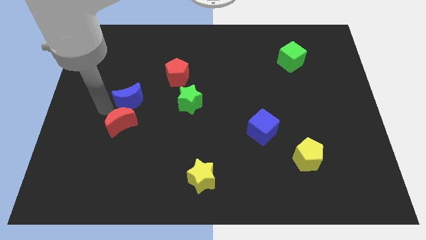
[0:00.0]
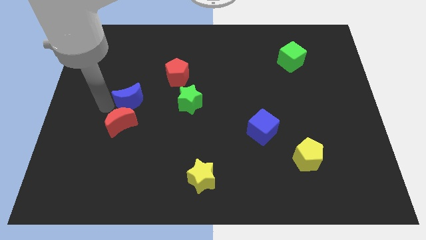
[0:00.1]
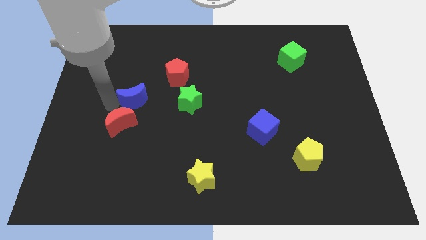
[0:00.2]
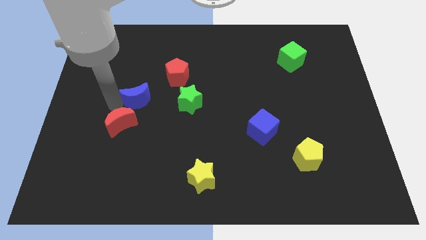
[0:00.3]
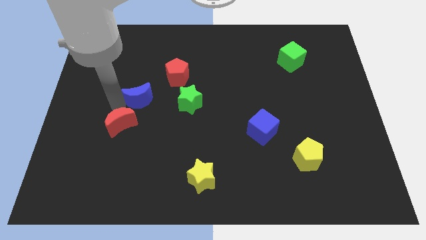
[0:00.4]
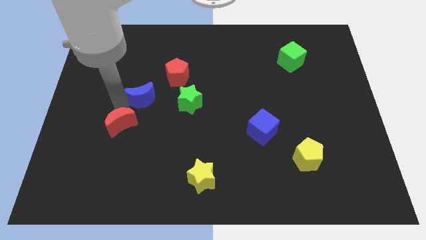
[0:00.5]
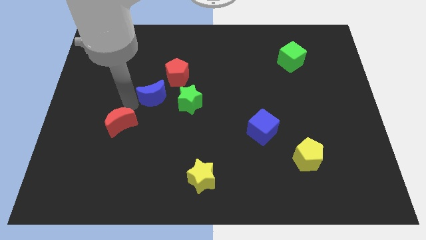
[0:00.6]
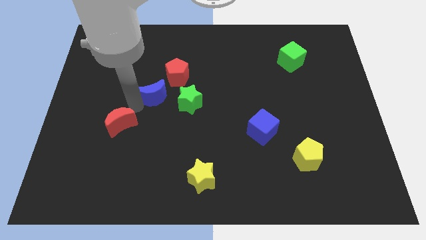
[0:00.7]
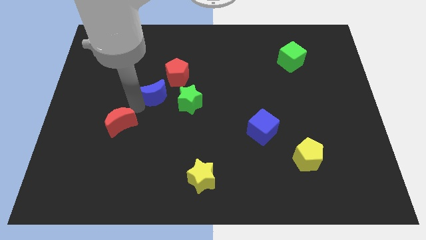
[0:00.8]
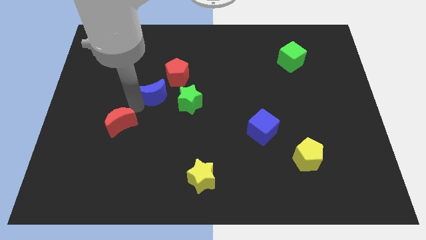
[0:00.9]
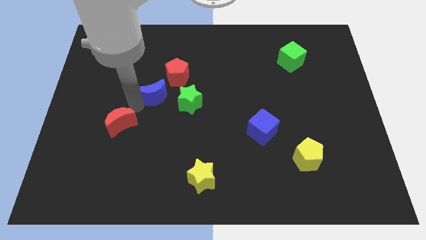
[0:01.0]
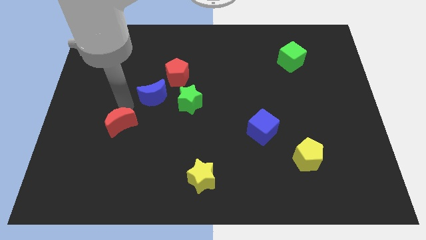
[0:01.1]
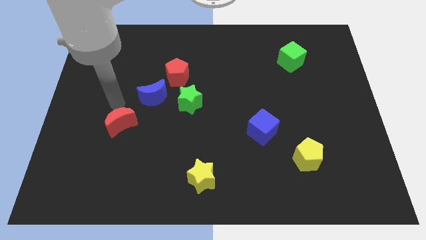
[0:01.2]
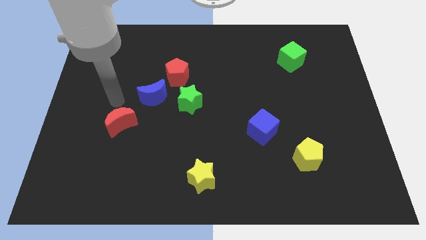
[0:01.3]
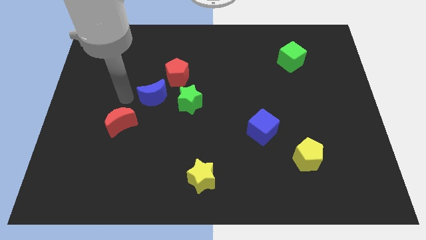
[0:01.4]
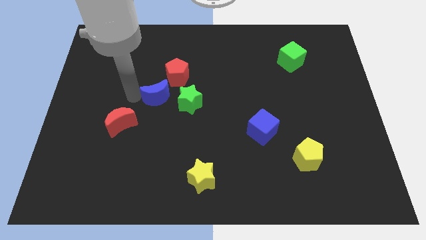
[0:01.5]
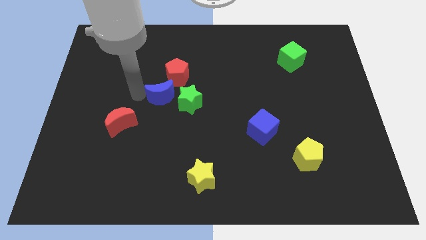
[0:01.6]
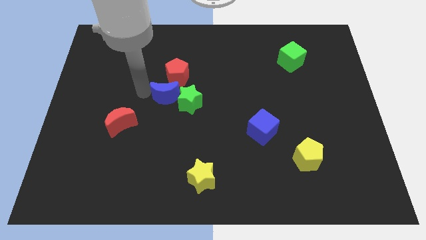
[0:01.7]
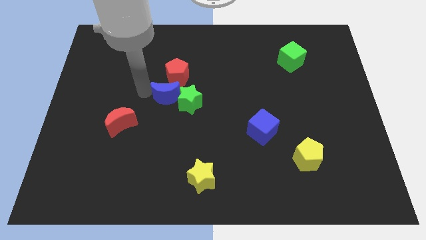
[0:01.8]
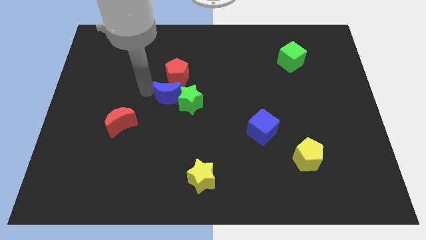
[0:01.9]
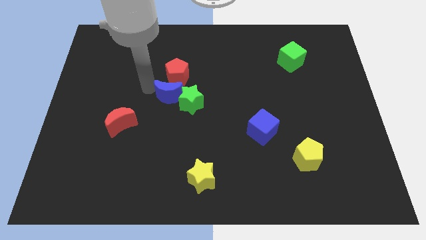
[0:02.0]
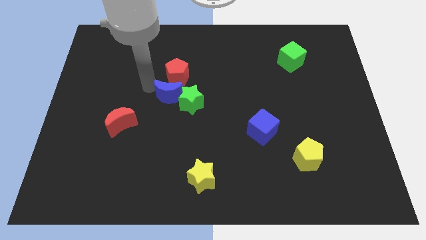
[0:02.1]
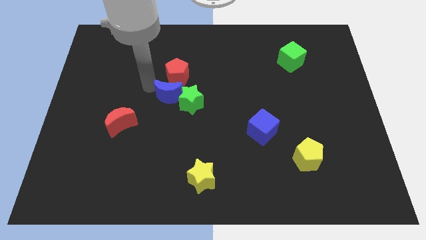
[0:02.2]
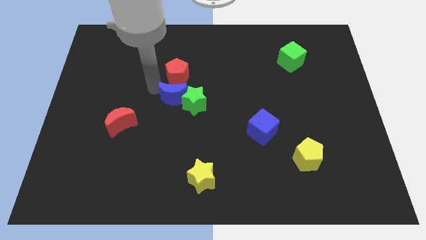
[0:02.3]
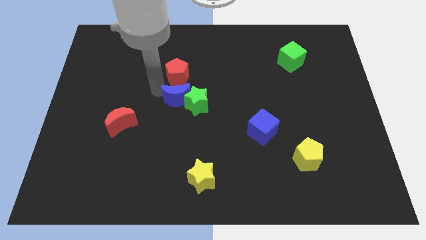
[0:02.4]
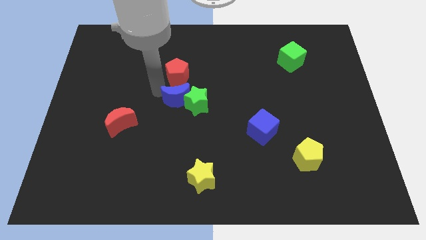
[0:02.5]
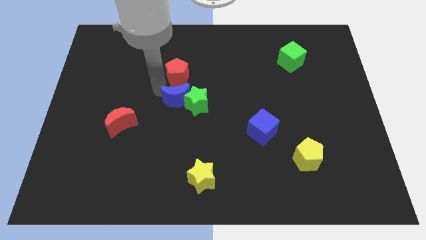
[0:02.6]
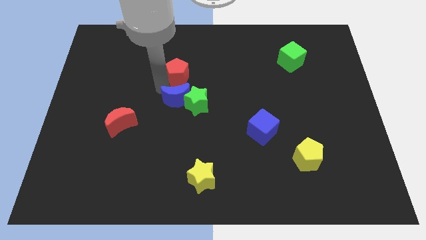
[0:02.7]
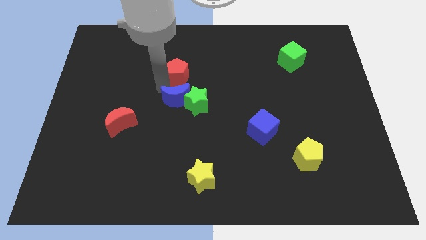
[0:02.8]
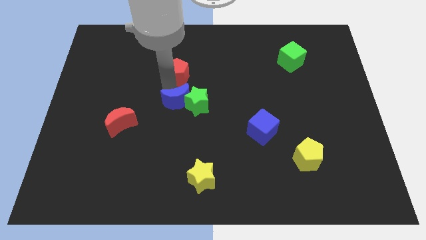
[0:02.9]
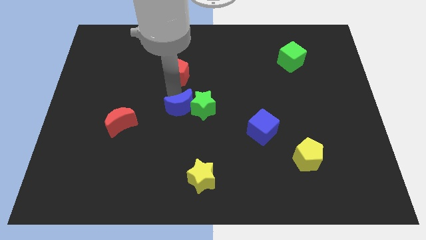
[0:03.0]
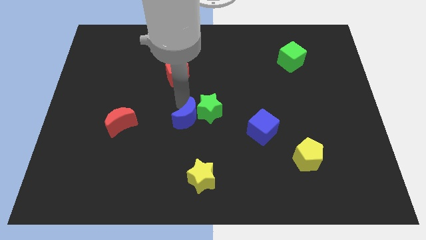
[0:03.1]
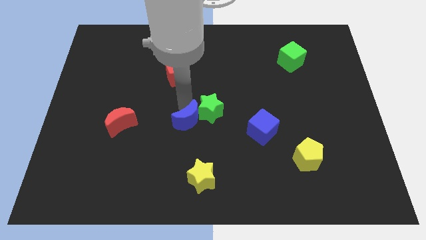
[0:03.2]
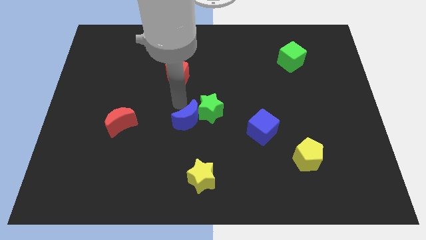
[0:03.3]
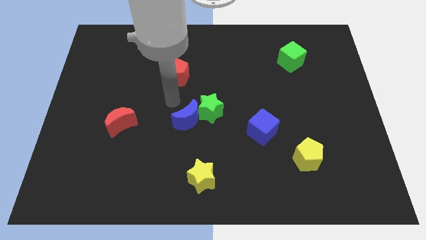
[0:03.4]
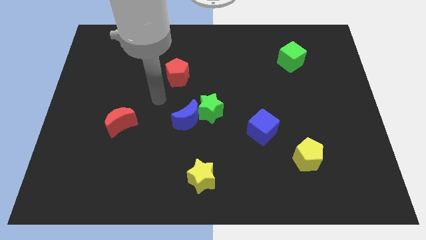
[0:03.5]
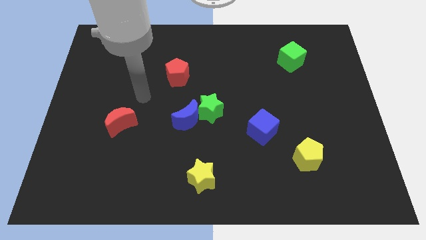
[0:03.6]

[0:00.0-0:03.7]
push the green star towards the center of the board using the blue crescent

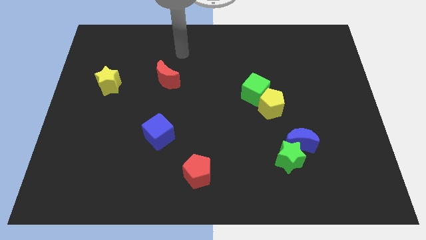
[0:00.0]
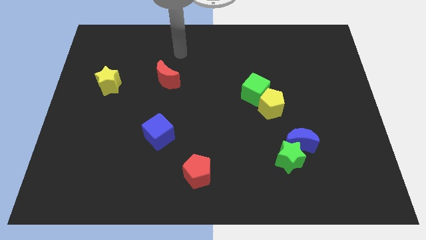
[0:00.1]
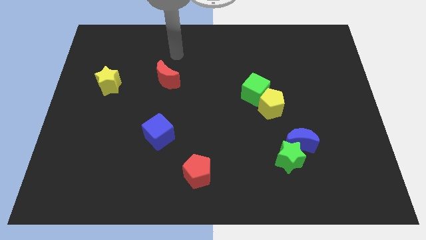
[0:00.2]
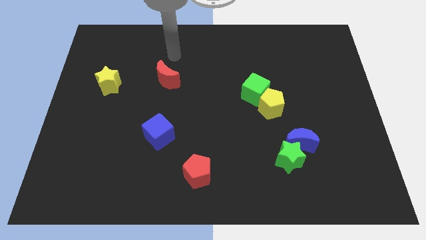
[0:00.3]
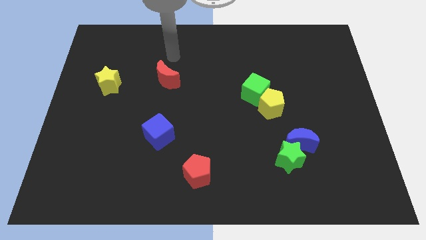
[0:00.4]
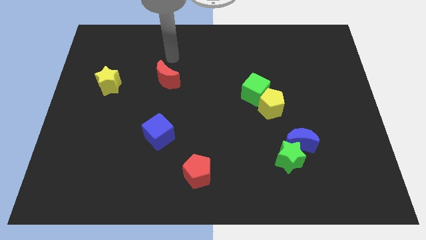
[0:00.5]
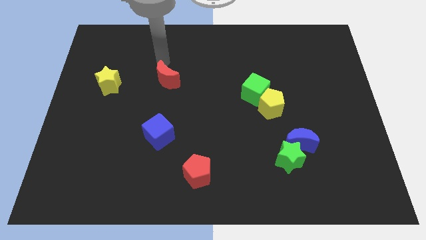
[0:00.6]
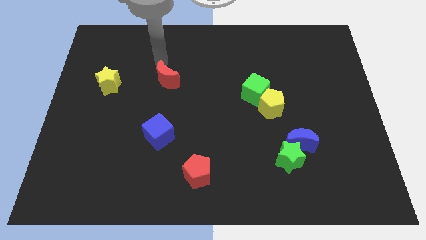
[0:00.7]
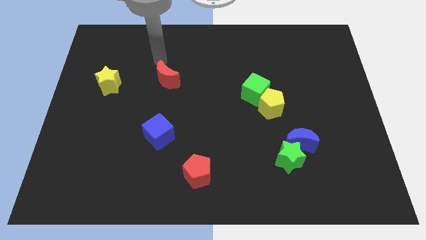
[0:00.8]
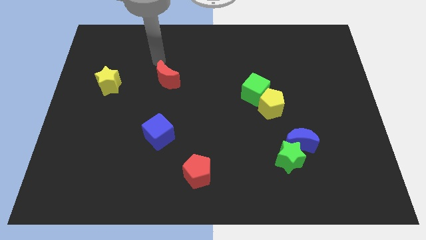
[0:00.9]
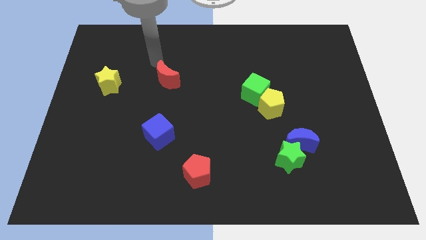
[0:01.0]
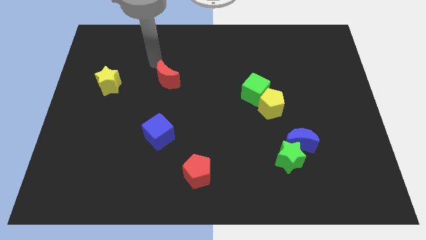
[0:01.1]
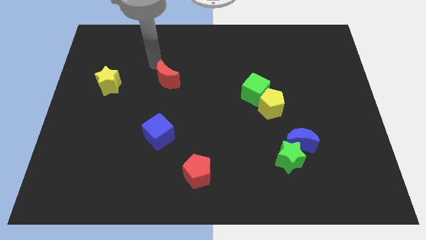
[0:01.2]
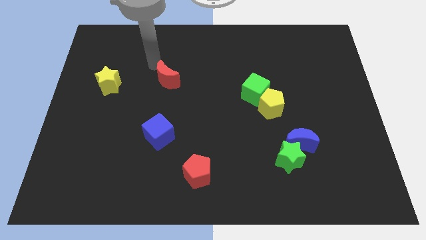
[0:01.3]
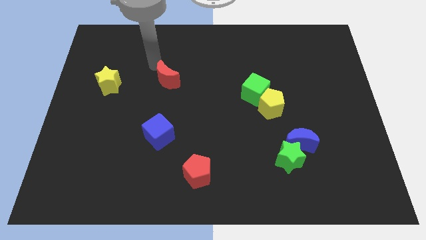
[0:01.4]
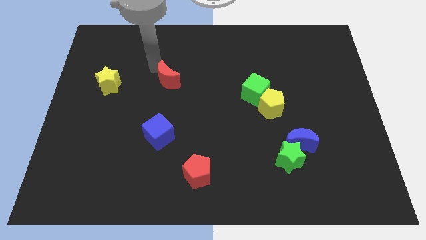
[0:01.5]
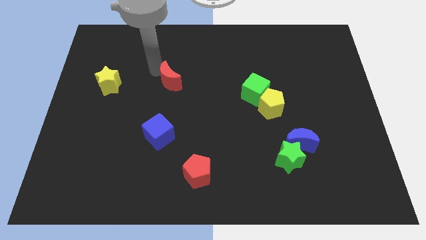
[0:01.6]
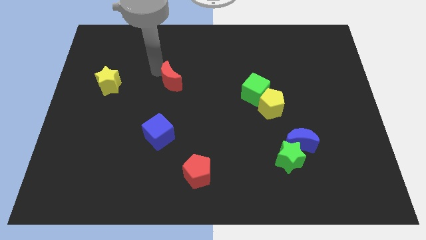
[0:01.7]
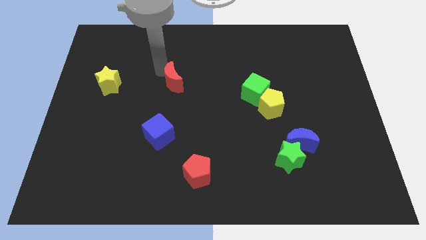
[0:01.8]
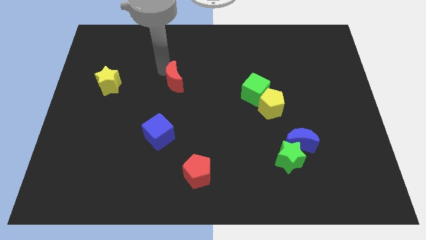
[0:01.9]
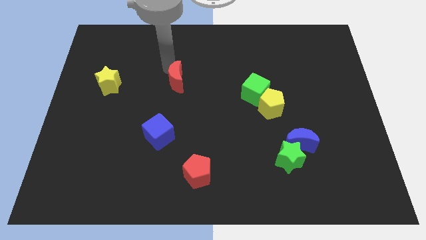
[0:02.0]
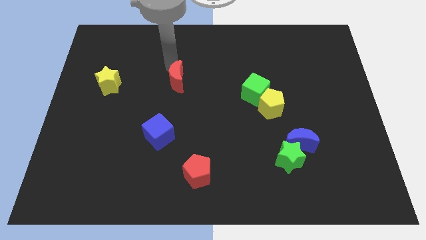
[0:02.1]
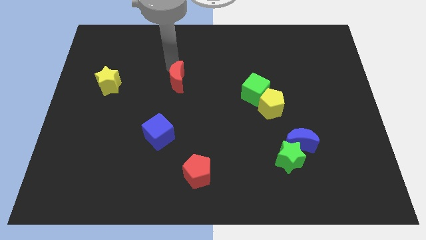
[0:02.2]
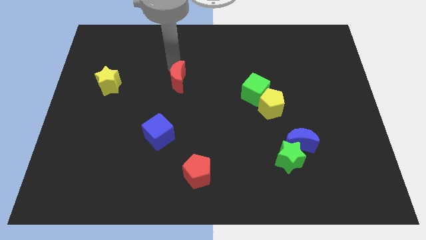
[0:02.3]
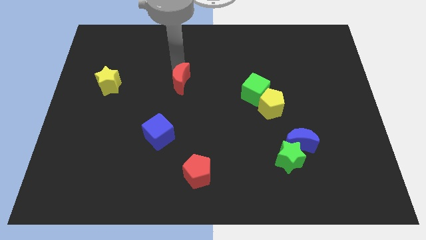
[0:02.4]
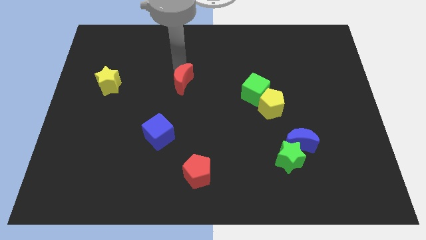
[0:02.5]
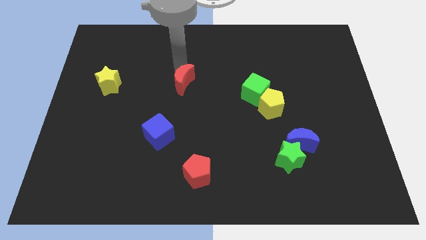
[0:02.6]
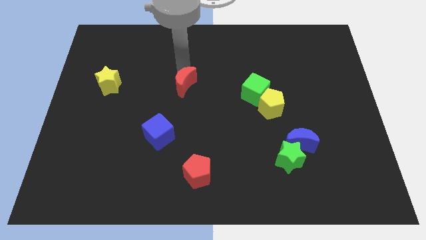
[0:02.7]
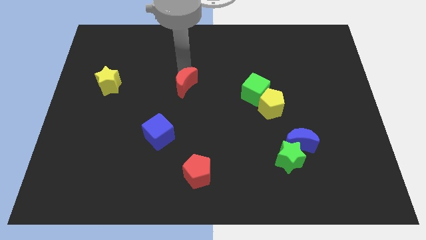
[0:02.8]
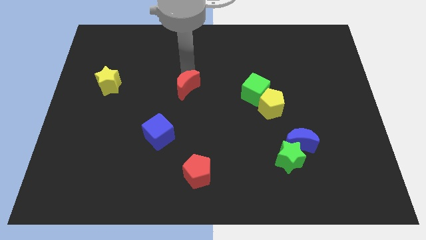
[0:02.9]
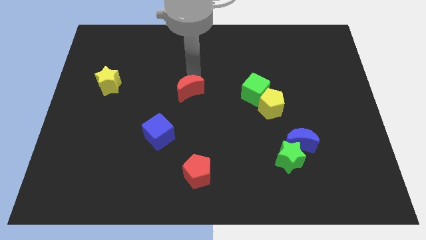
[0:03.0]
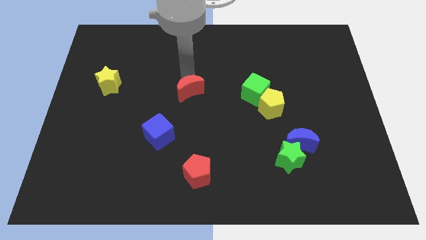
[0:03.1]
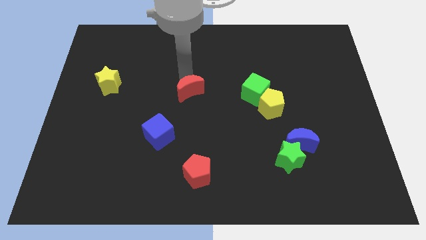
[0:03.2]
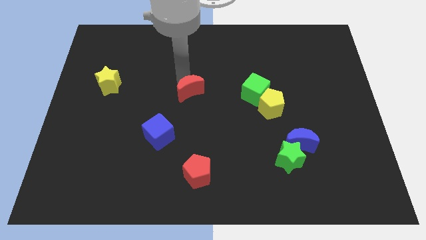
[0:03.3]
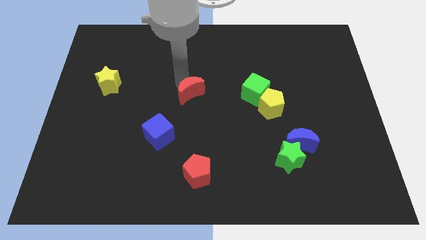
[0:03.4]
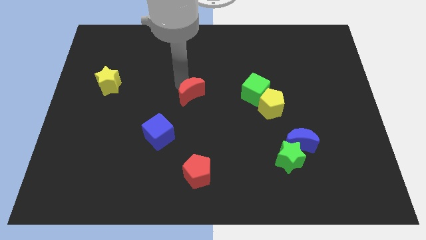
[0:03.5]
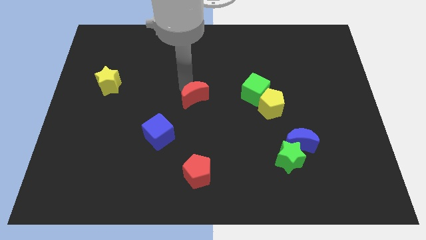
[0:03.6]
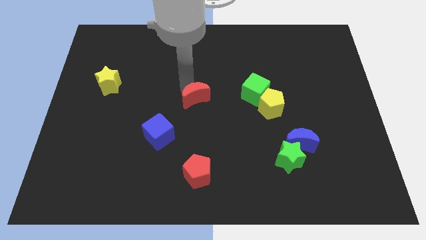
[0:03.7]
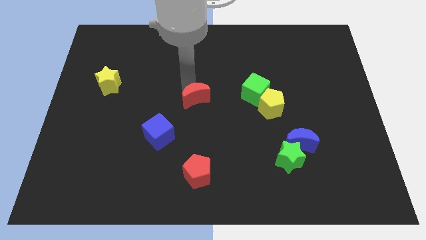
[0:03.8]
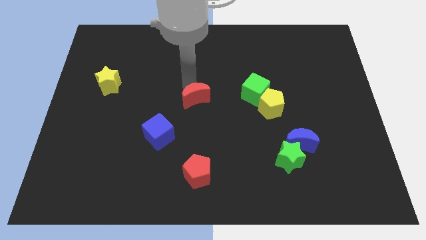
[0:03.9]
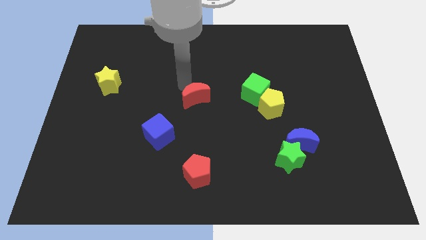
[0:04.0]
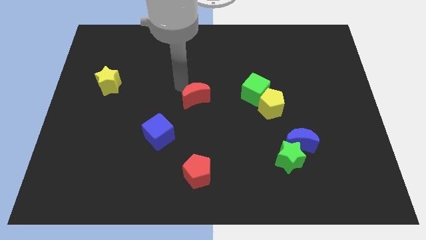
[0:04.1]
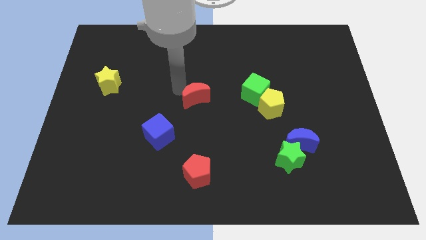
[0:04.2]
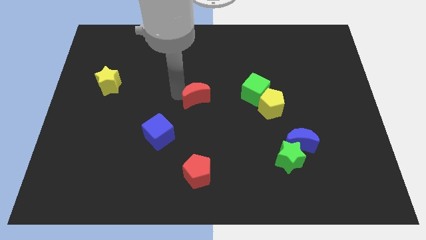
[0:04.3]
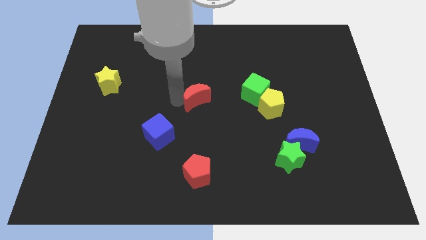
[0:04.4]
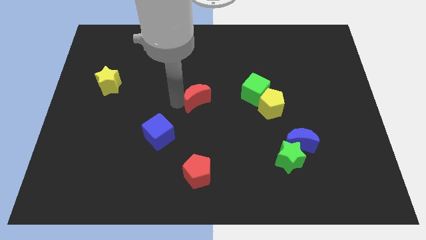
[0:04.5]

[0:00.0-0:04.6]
push the red moon slightly towards the bottom of the board

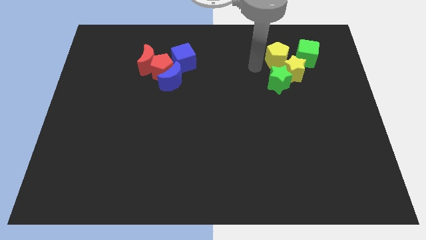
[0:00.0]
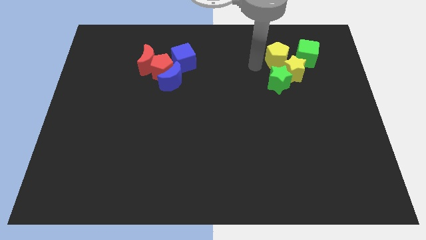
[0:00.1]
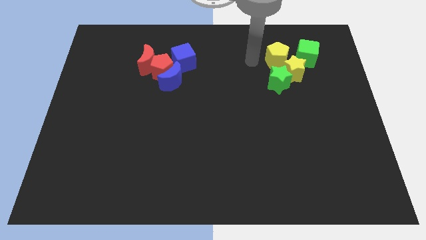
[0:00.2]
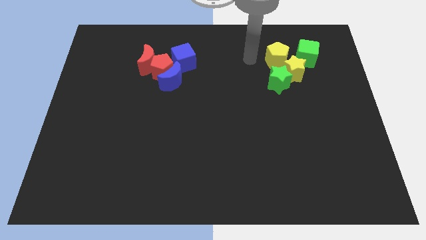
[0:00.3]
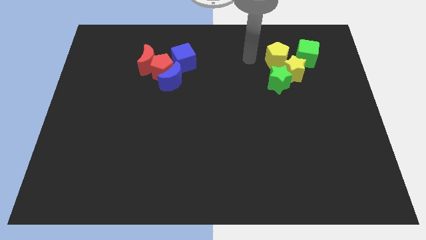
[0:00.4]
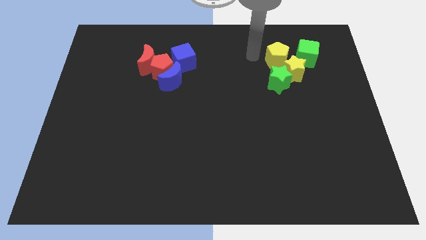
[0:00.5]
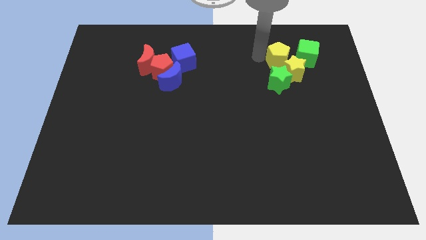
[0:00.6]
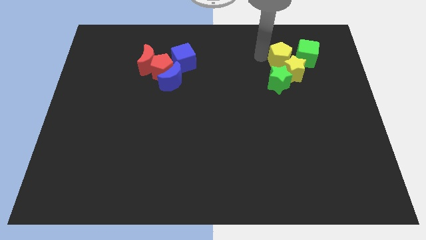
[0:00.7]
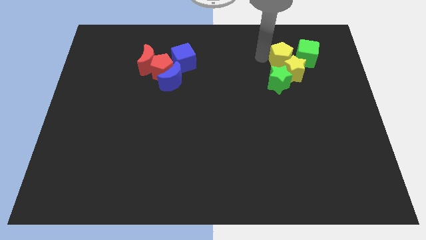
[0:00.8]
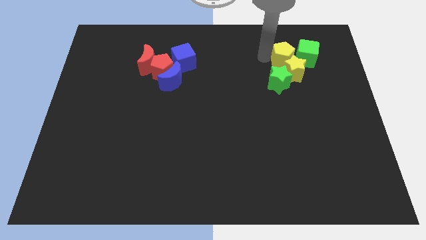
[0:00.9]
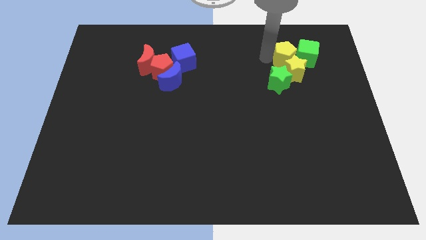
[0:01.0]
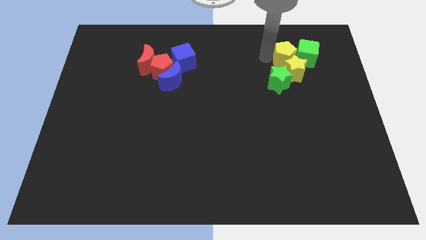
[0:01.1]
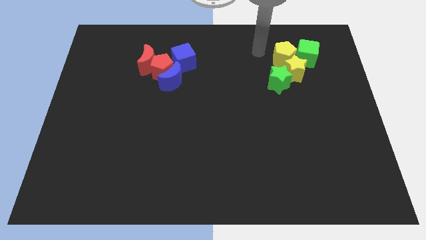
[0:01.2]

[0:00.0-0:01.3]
move the yellow pentagon into the green cube
